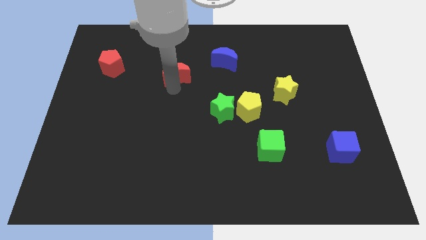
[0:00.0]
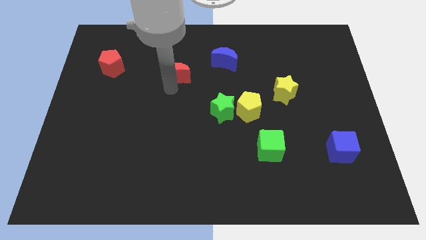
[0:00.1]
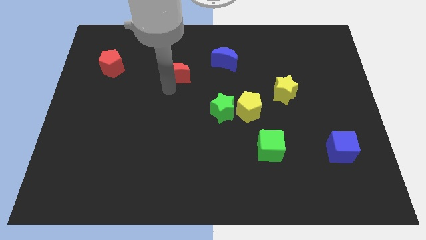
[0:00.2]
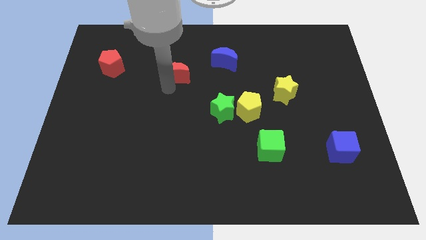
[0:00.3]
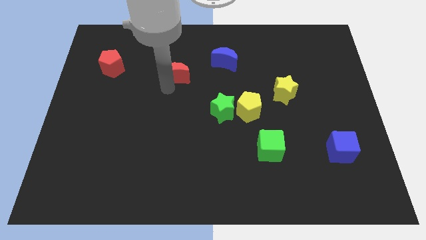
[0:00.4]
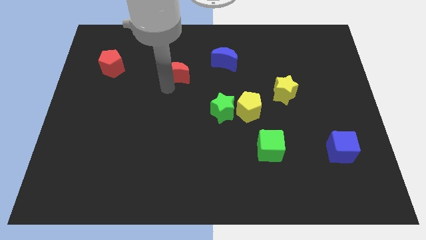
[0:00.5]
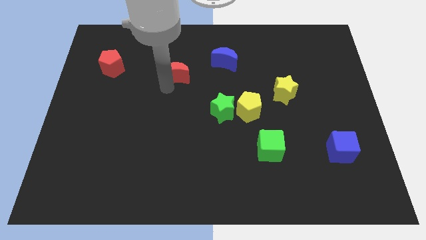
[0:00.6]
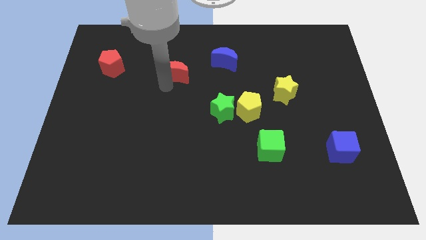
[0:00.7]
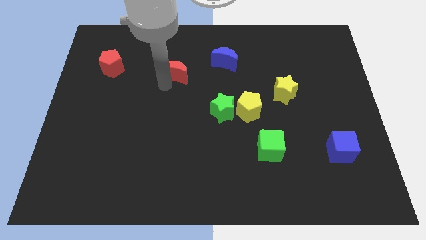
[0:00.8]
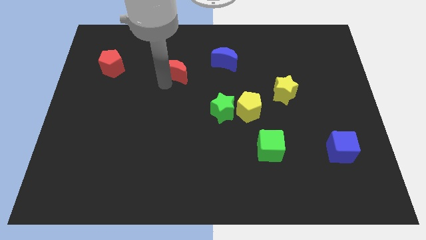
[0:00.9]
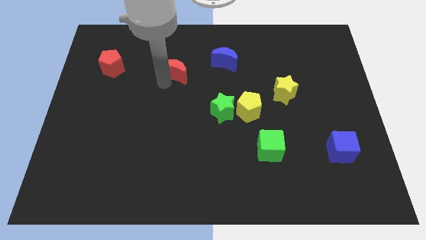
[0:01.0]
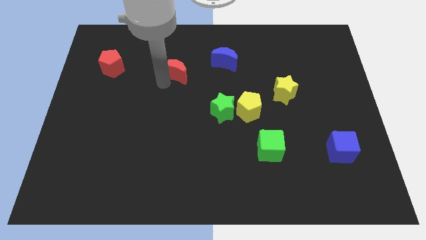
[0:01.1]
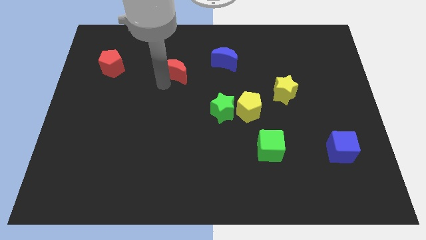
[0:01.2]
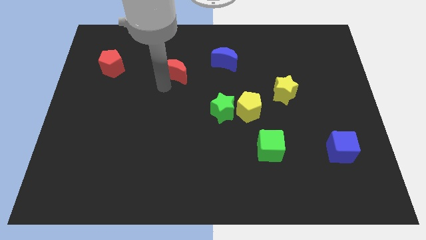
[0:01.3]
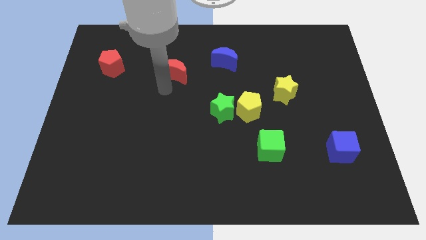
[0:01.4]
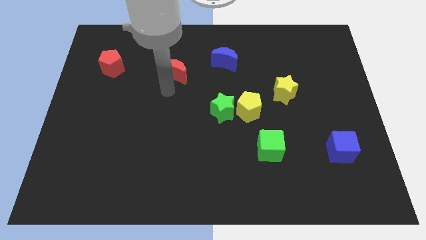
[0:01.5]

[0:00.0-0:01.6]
move red crescent slightly

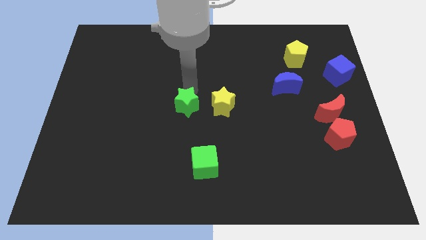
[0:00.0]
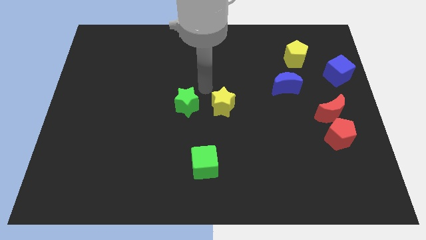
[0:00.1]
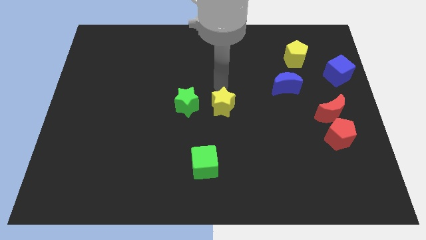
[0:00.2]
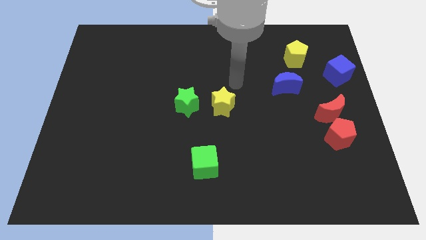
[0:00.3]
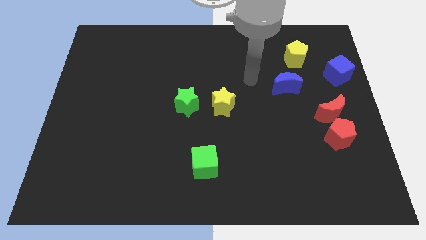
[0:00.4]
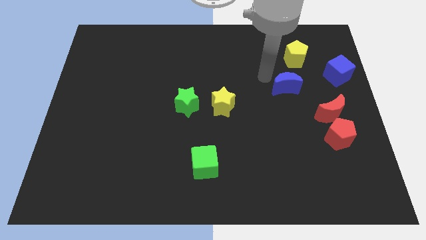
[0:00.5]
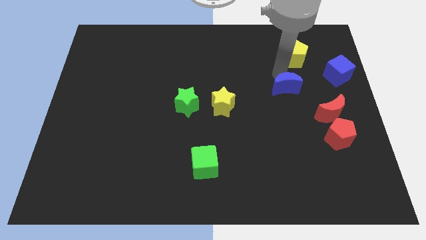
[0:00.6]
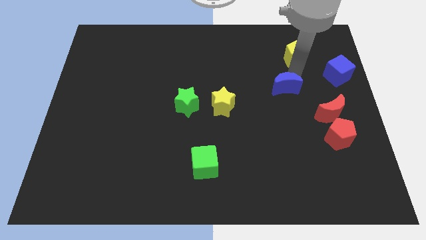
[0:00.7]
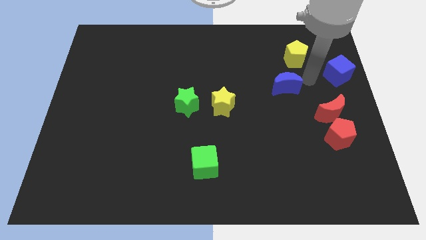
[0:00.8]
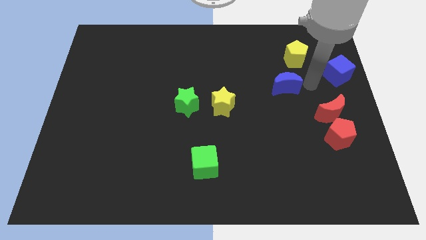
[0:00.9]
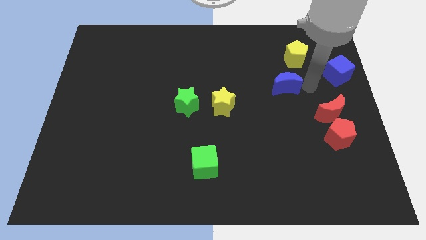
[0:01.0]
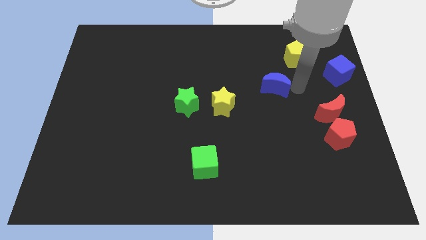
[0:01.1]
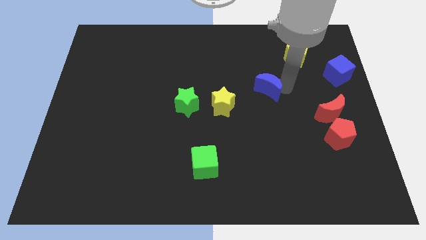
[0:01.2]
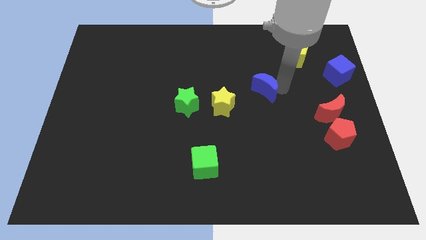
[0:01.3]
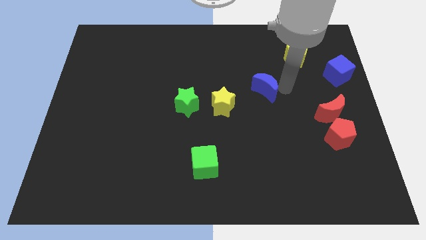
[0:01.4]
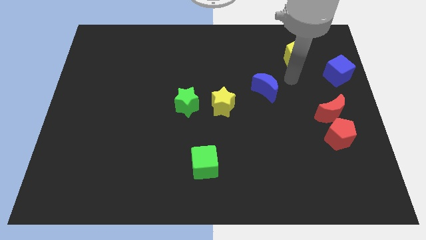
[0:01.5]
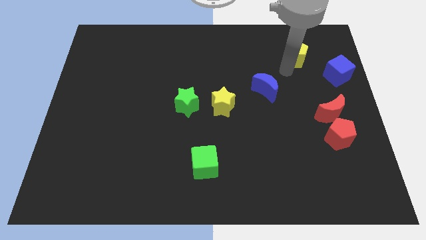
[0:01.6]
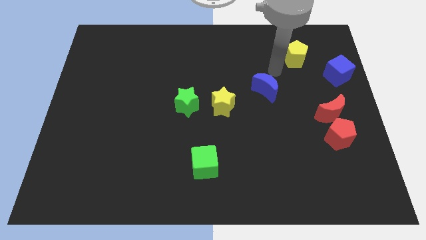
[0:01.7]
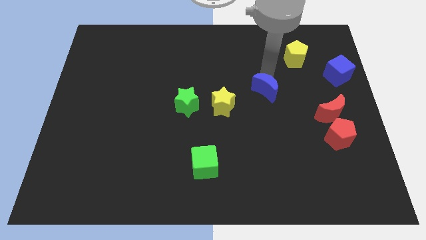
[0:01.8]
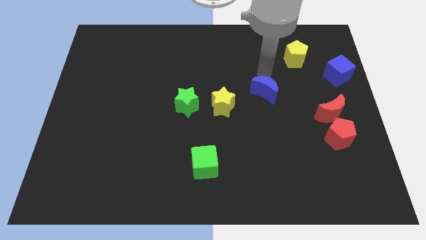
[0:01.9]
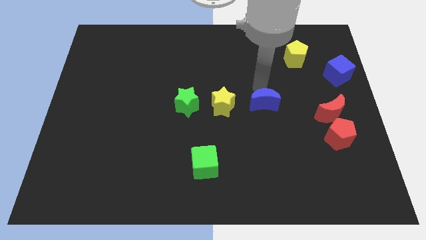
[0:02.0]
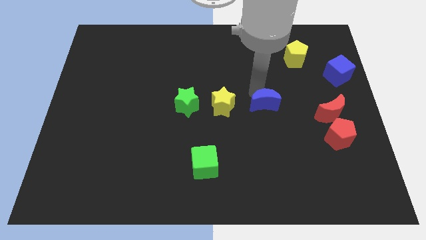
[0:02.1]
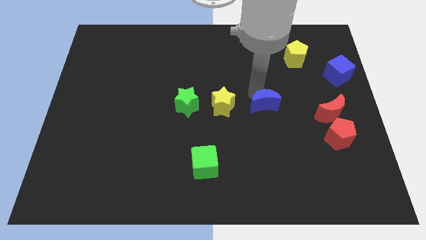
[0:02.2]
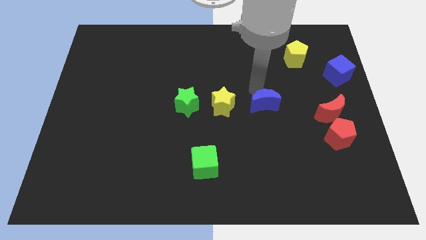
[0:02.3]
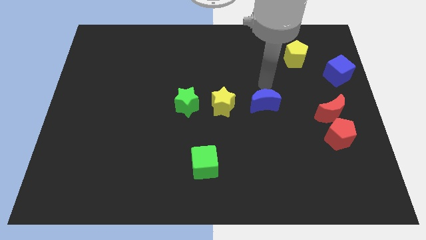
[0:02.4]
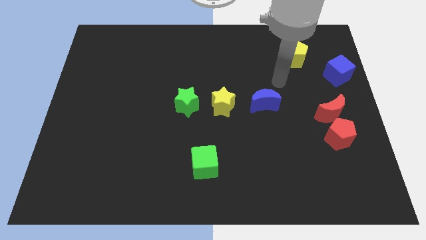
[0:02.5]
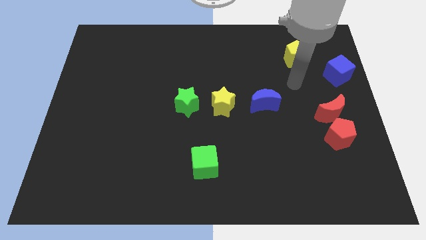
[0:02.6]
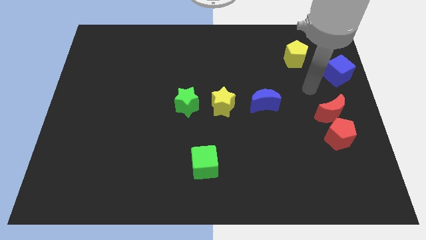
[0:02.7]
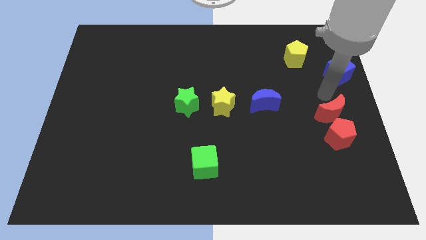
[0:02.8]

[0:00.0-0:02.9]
move the blue moon to the center

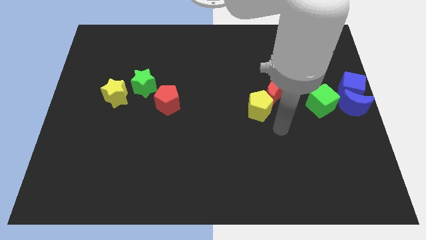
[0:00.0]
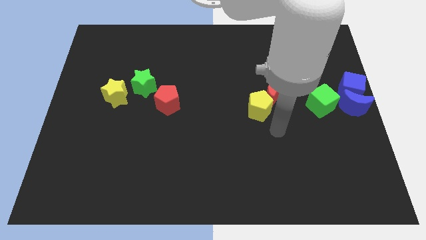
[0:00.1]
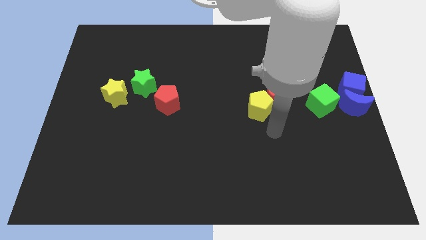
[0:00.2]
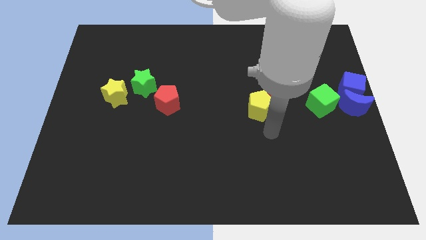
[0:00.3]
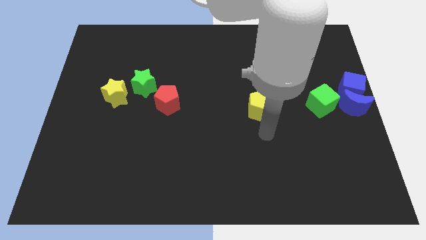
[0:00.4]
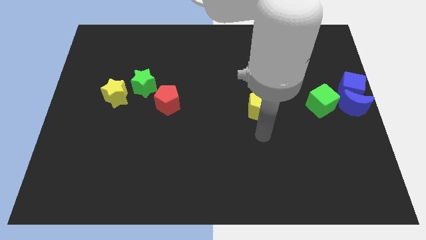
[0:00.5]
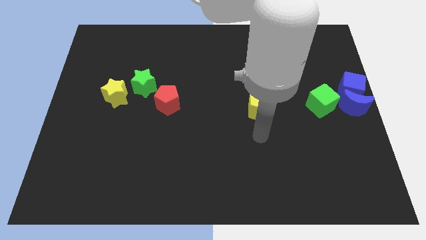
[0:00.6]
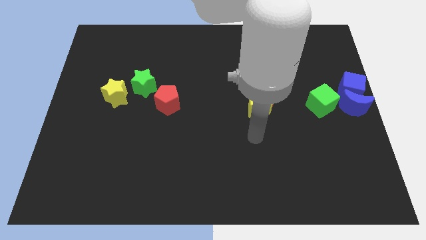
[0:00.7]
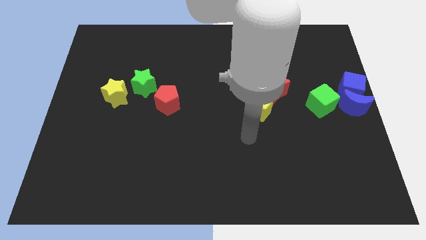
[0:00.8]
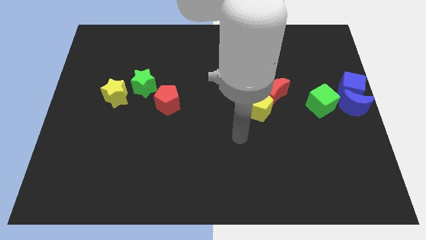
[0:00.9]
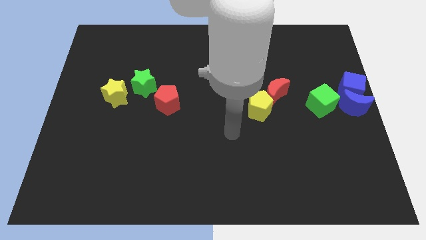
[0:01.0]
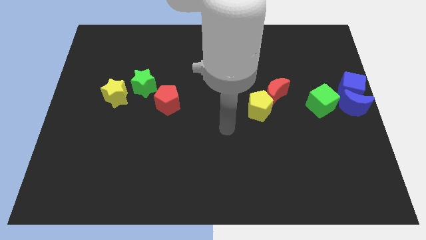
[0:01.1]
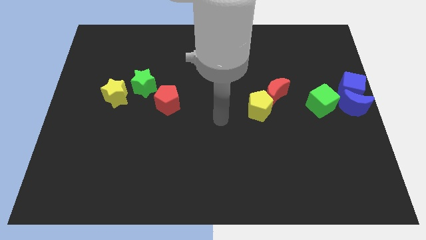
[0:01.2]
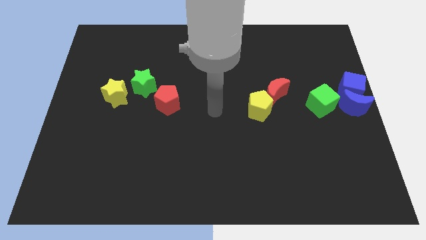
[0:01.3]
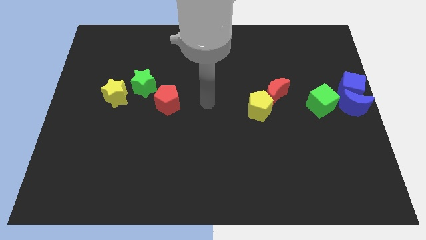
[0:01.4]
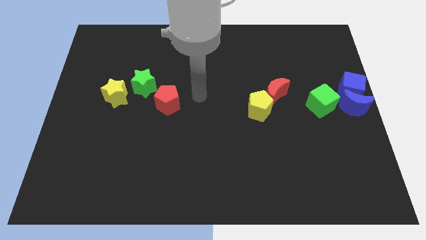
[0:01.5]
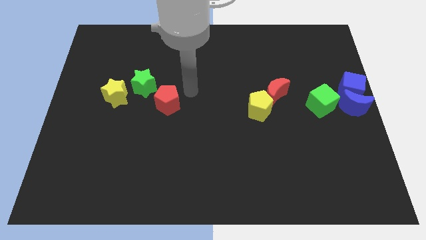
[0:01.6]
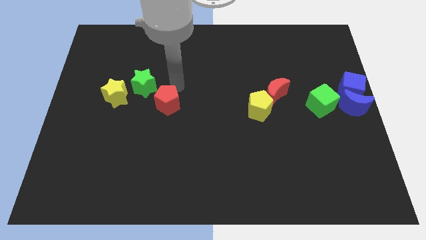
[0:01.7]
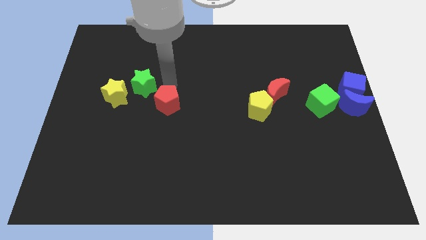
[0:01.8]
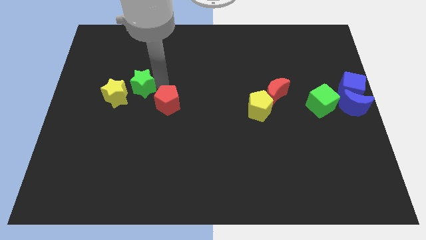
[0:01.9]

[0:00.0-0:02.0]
move your arm to the top of the red pentagon

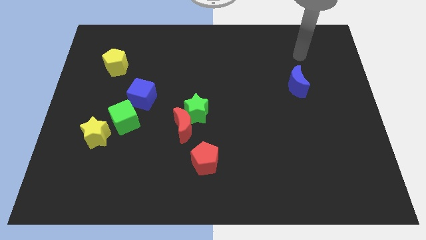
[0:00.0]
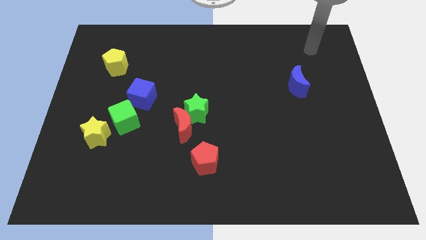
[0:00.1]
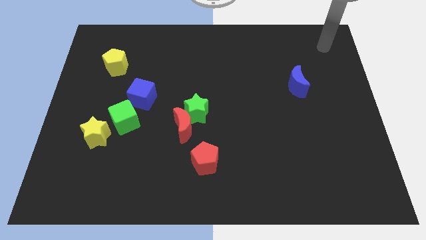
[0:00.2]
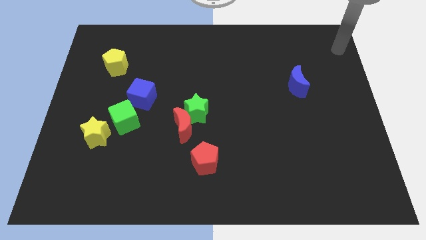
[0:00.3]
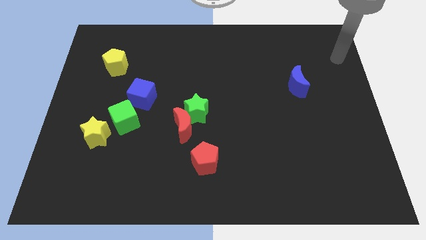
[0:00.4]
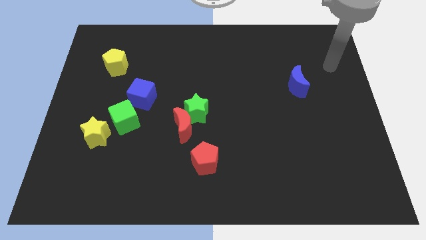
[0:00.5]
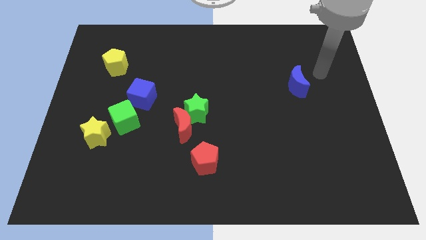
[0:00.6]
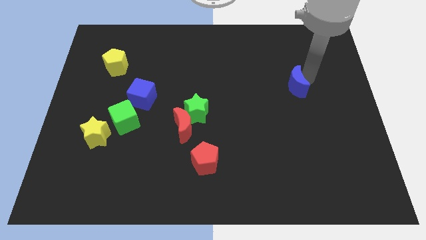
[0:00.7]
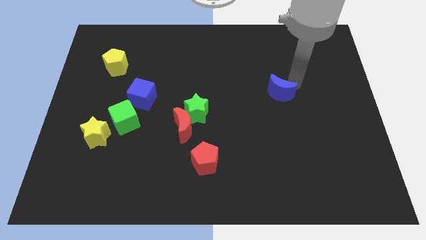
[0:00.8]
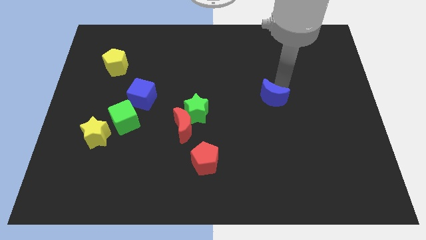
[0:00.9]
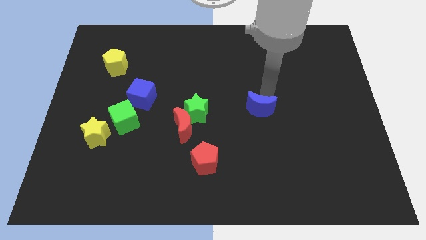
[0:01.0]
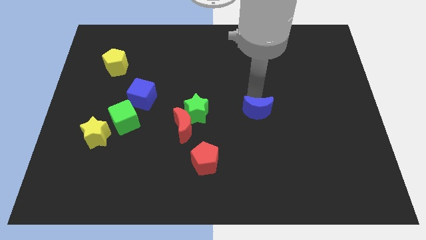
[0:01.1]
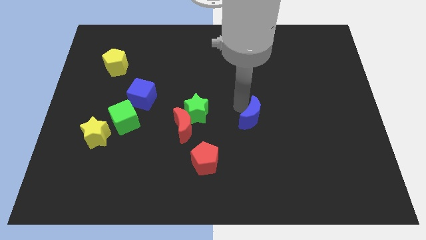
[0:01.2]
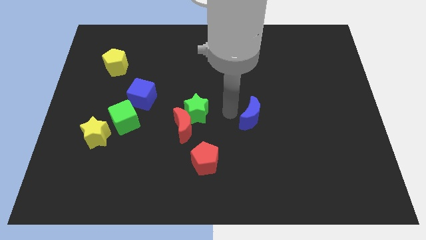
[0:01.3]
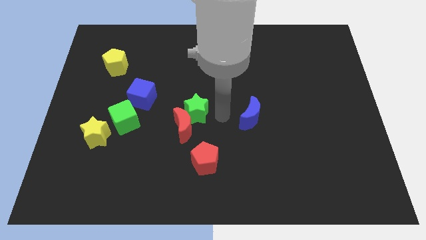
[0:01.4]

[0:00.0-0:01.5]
place the blue moon horizontally at the right side of the green star

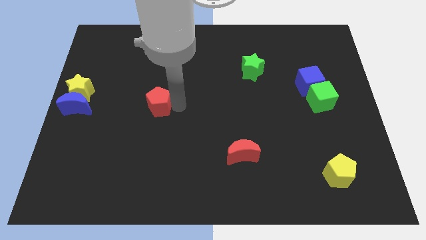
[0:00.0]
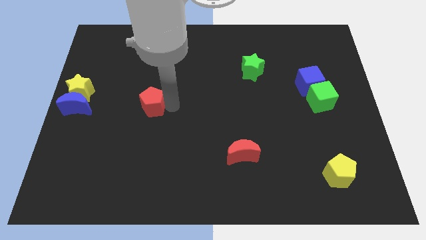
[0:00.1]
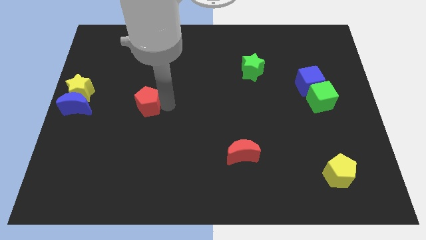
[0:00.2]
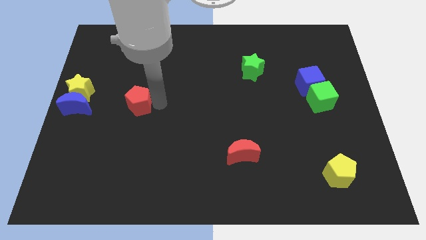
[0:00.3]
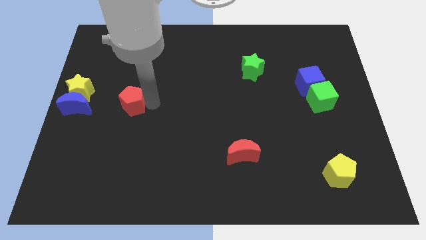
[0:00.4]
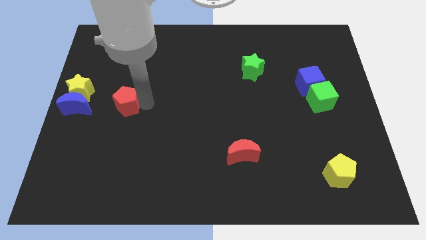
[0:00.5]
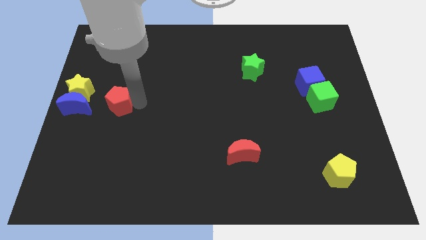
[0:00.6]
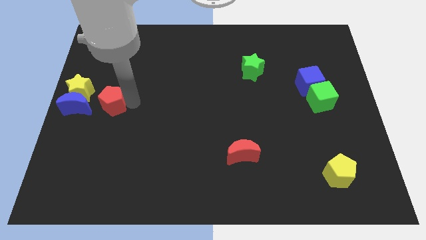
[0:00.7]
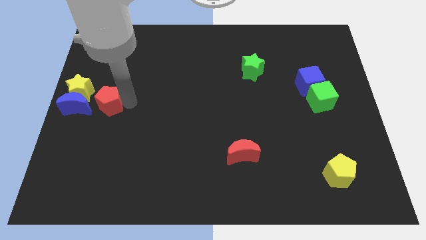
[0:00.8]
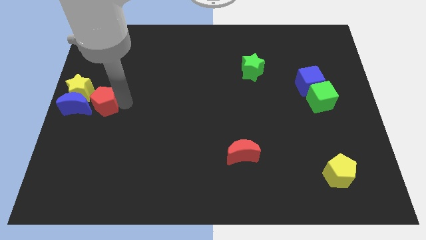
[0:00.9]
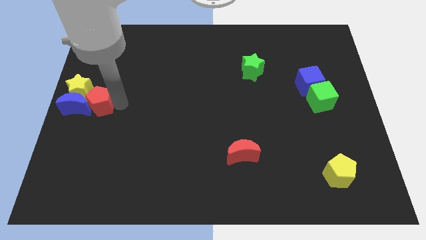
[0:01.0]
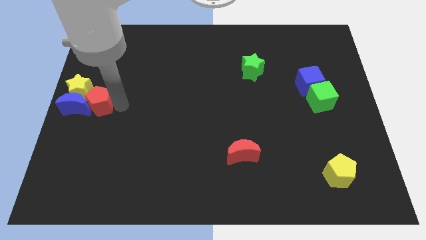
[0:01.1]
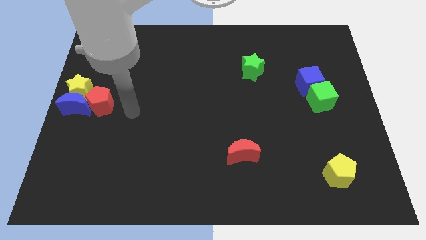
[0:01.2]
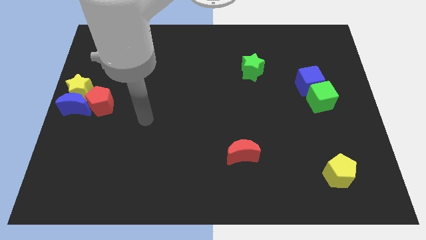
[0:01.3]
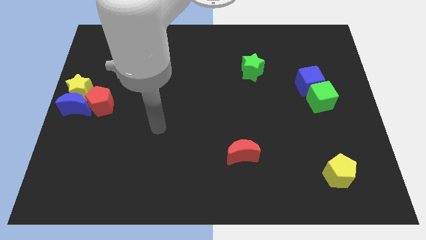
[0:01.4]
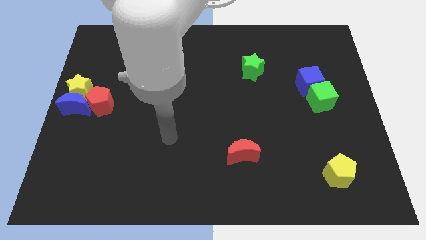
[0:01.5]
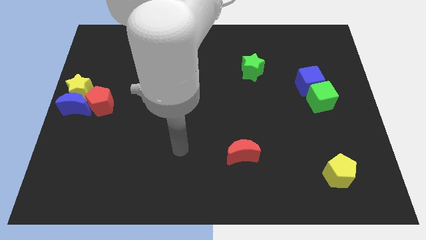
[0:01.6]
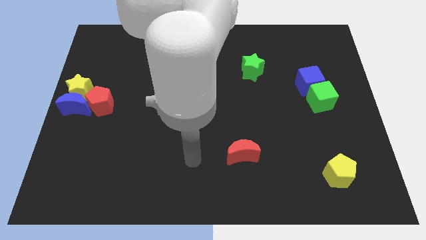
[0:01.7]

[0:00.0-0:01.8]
put red pentagon into the blue moon
